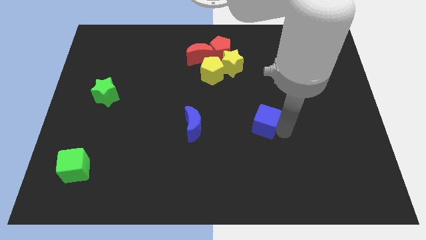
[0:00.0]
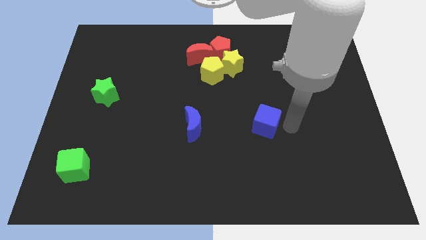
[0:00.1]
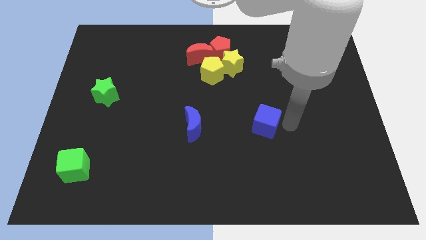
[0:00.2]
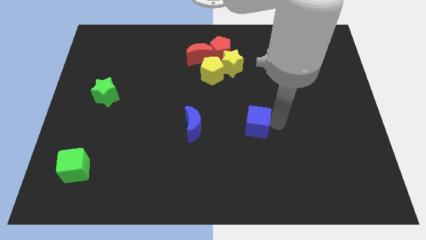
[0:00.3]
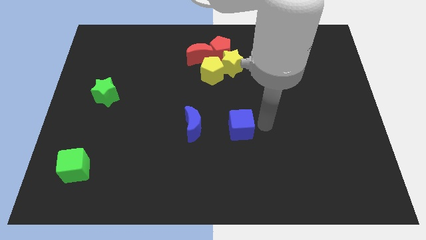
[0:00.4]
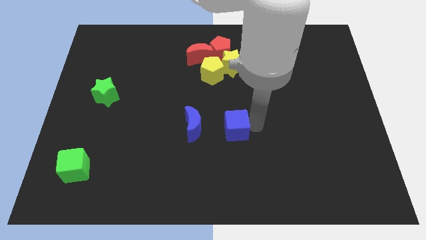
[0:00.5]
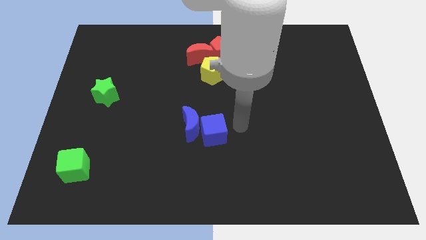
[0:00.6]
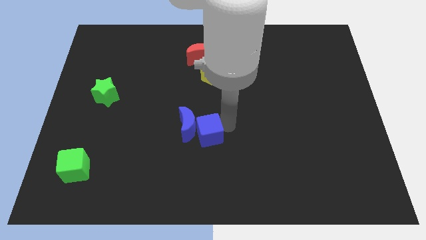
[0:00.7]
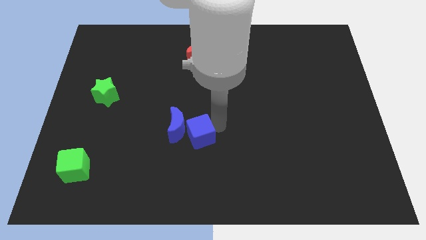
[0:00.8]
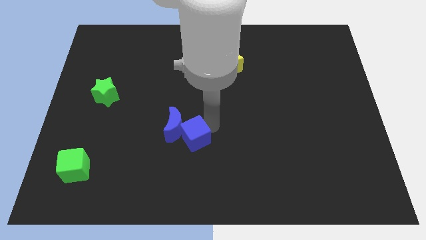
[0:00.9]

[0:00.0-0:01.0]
put the blue cube into the blue moon

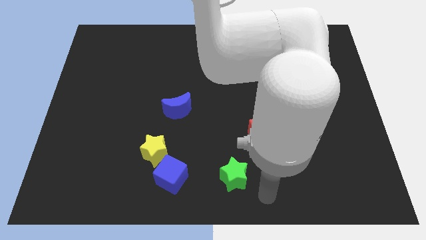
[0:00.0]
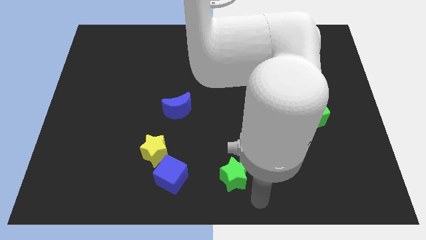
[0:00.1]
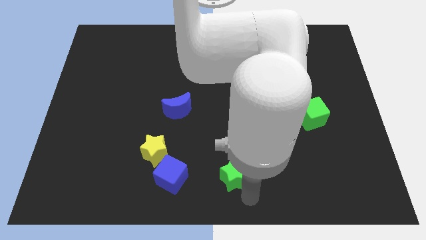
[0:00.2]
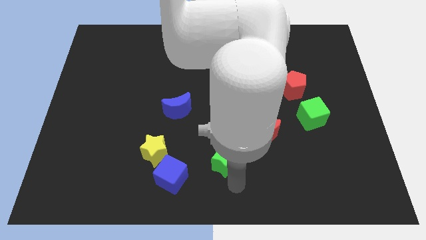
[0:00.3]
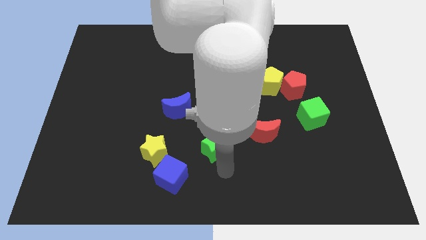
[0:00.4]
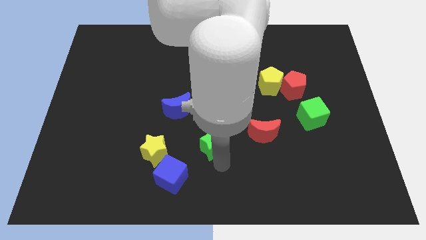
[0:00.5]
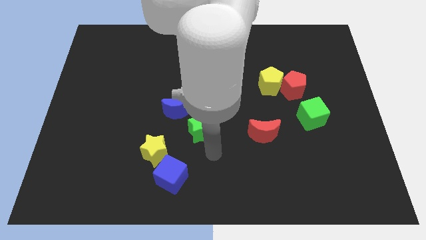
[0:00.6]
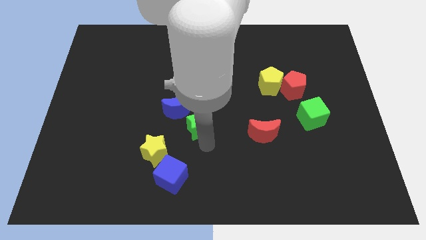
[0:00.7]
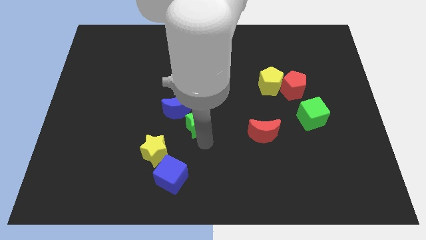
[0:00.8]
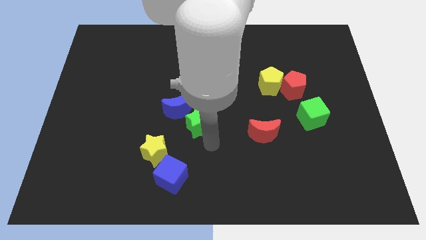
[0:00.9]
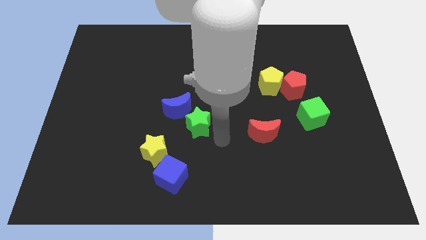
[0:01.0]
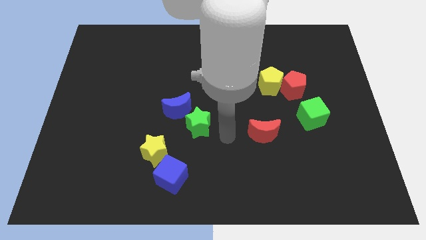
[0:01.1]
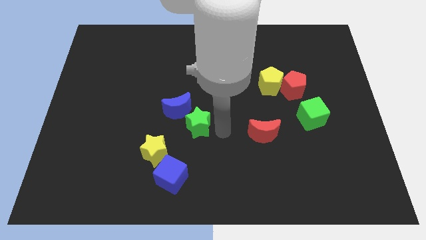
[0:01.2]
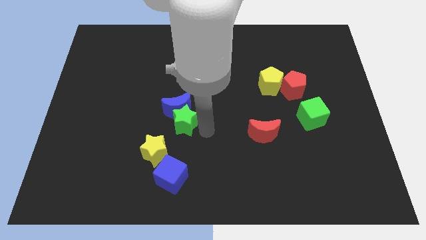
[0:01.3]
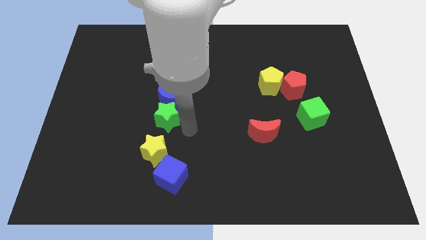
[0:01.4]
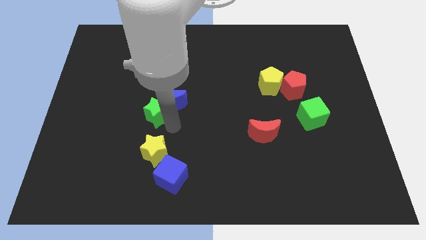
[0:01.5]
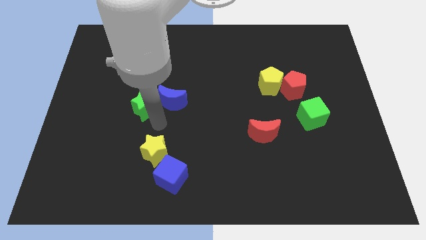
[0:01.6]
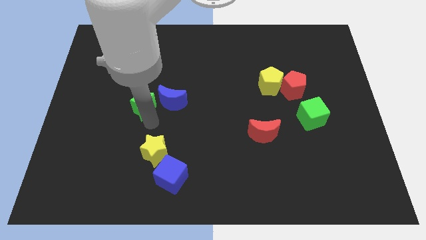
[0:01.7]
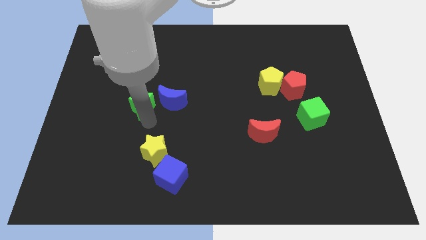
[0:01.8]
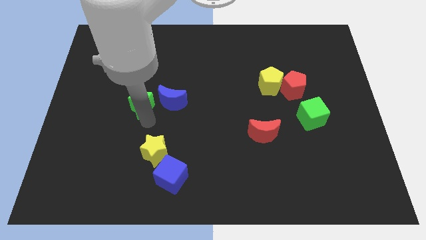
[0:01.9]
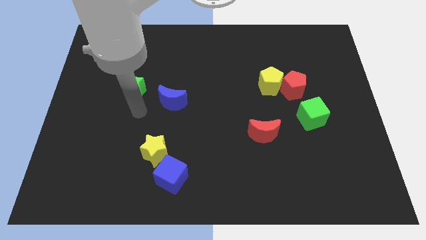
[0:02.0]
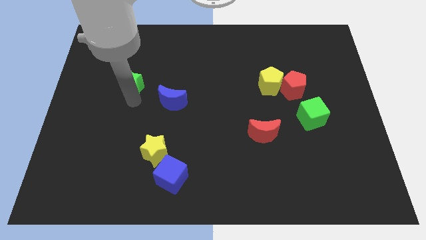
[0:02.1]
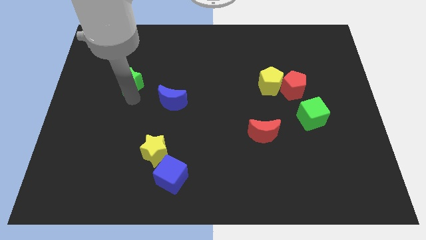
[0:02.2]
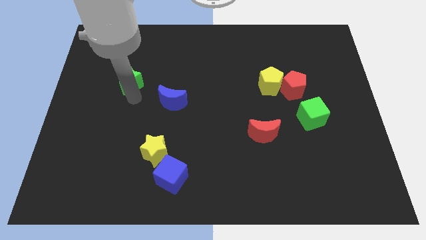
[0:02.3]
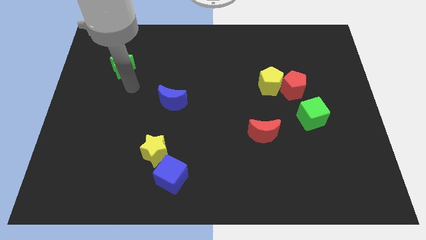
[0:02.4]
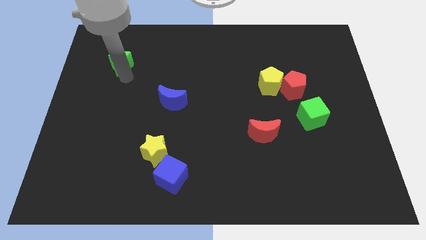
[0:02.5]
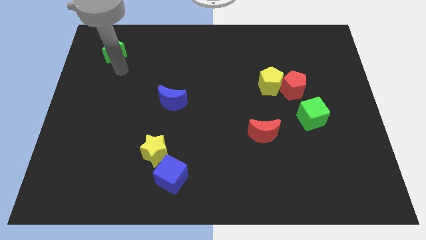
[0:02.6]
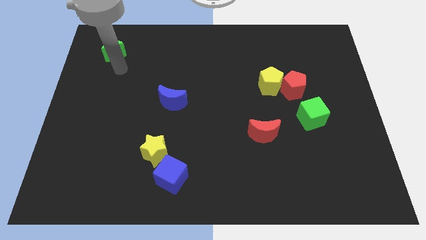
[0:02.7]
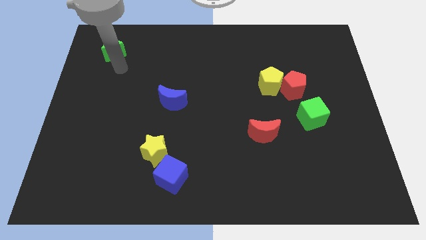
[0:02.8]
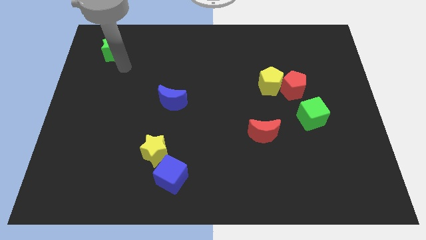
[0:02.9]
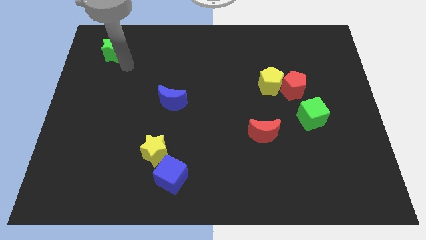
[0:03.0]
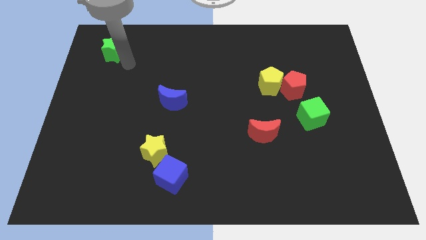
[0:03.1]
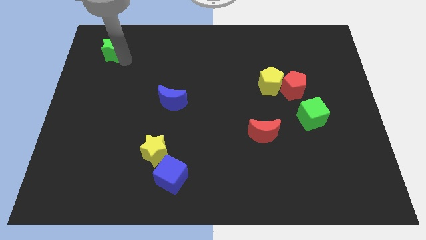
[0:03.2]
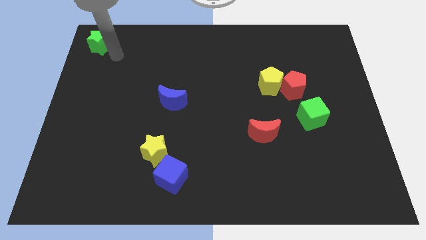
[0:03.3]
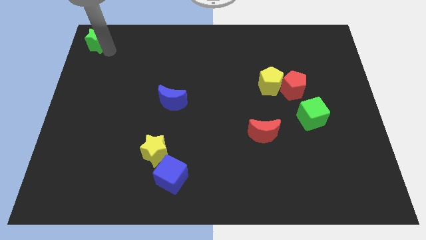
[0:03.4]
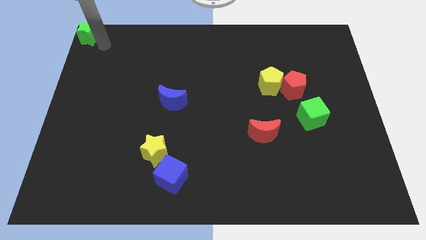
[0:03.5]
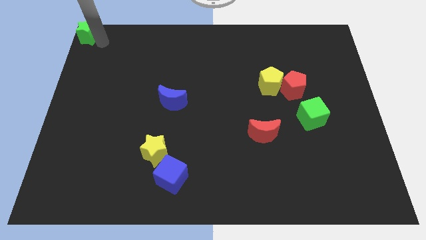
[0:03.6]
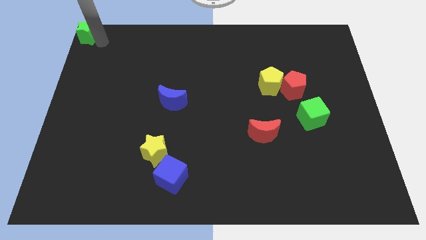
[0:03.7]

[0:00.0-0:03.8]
push the green star to the top left corner of the board

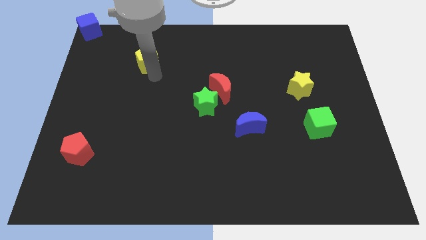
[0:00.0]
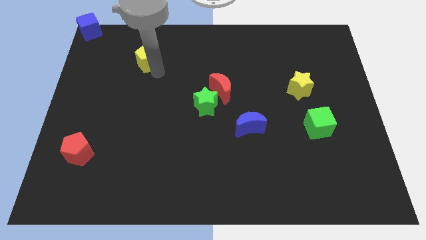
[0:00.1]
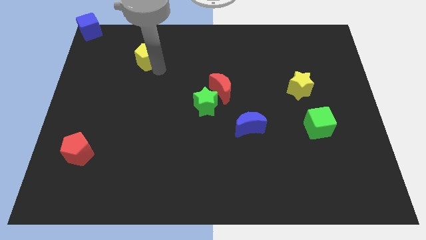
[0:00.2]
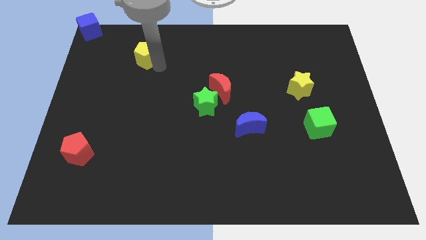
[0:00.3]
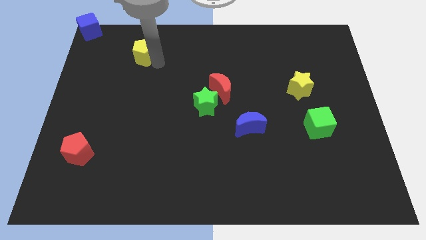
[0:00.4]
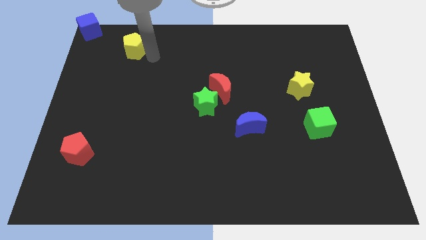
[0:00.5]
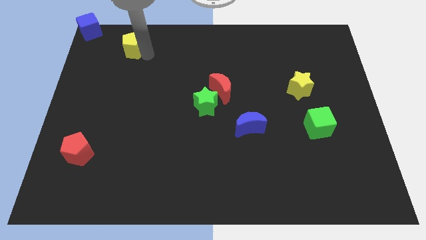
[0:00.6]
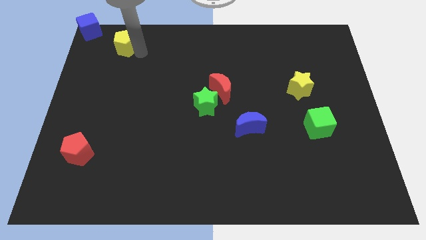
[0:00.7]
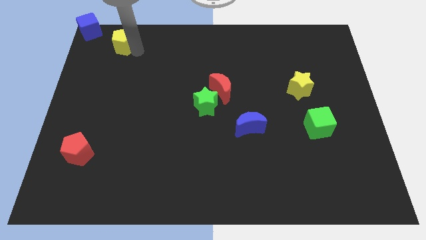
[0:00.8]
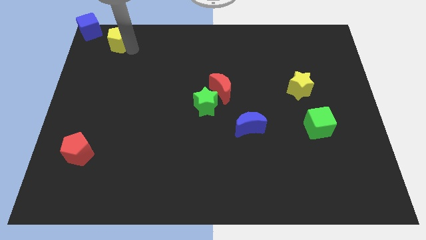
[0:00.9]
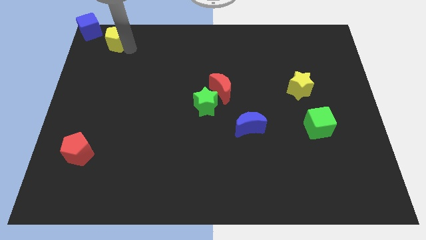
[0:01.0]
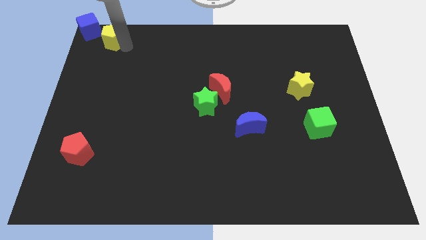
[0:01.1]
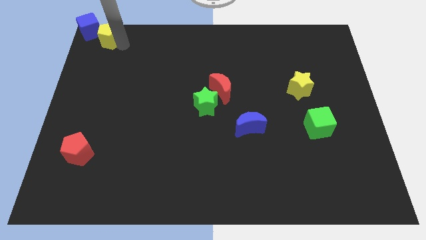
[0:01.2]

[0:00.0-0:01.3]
push the yellow pentagon towards the bottom right side of the blue cube

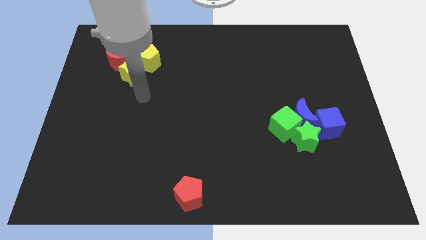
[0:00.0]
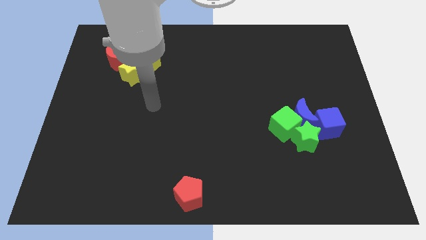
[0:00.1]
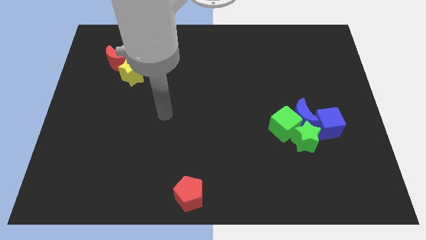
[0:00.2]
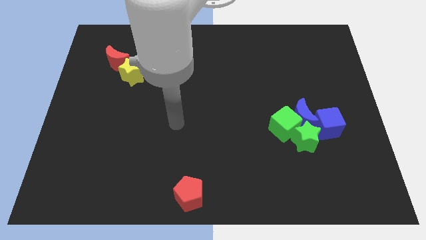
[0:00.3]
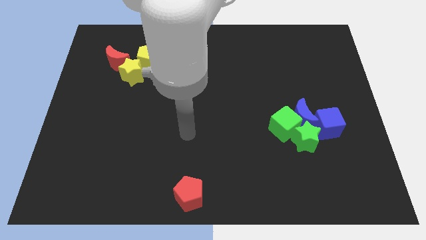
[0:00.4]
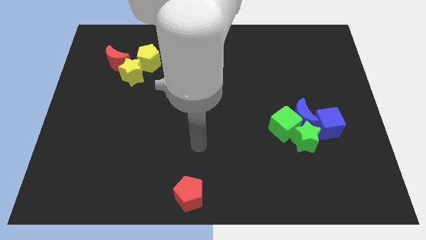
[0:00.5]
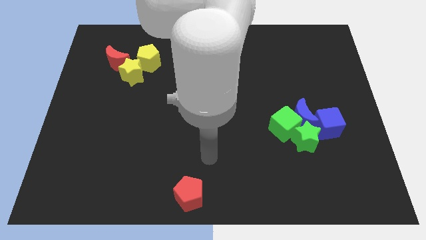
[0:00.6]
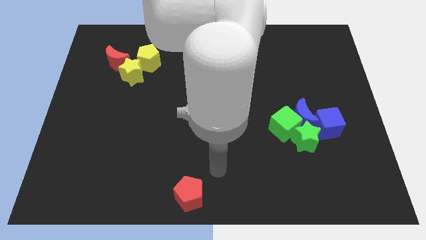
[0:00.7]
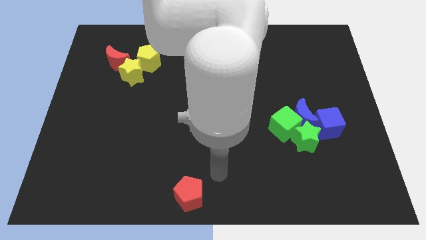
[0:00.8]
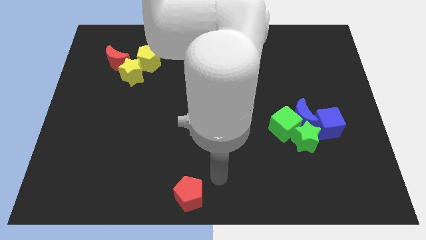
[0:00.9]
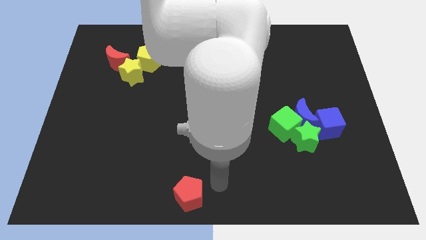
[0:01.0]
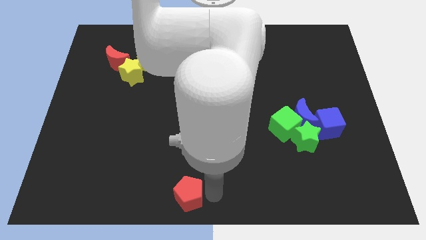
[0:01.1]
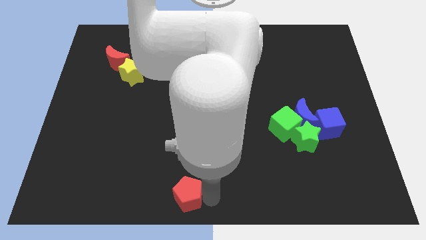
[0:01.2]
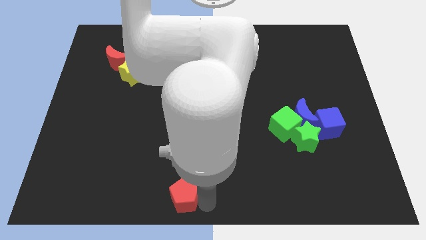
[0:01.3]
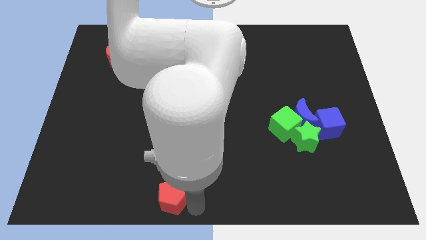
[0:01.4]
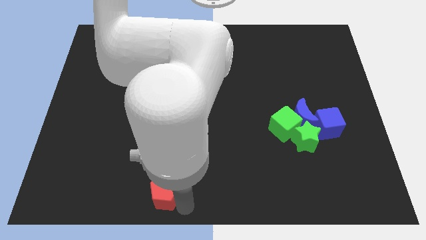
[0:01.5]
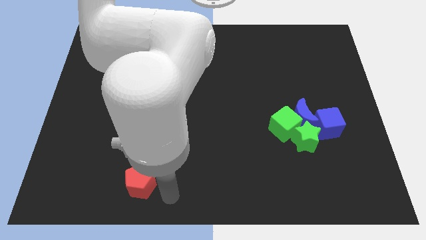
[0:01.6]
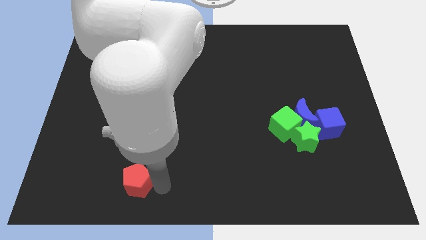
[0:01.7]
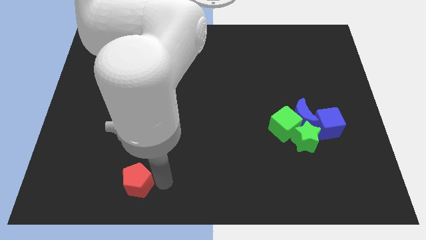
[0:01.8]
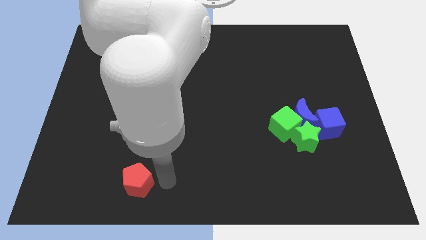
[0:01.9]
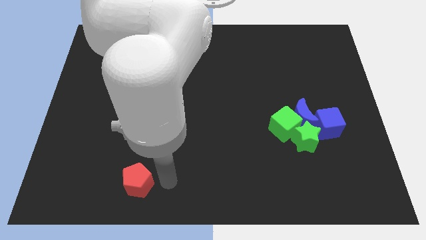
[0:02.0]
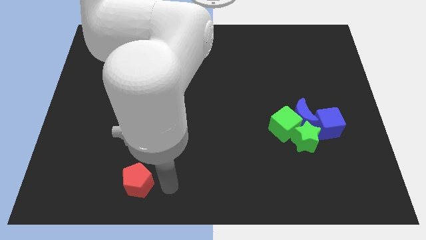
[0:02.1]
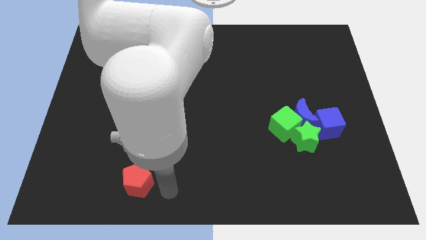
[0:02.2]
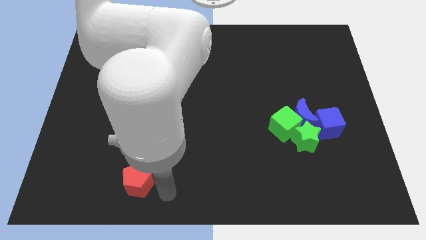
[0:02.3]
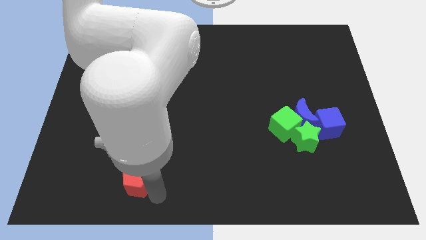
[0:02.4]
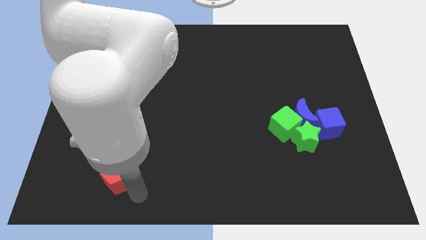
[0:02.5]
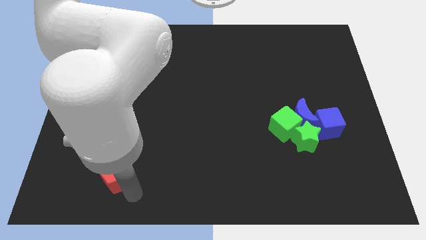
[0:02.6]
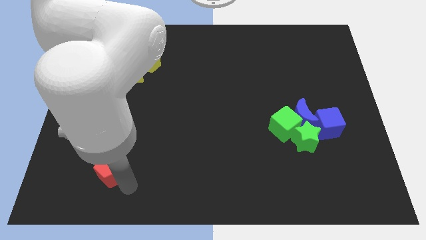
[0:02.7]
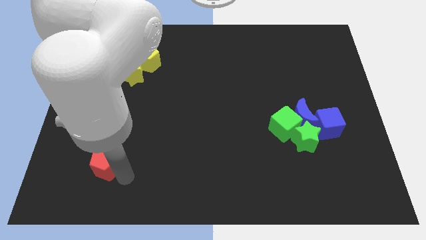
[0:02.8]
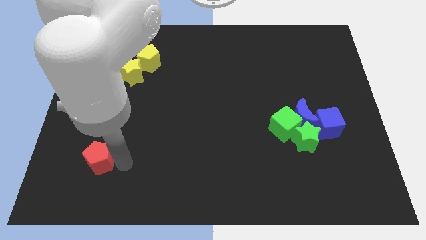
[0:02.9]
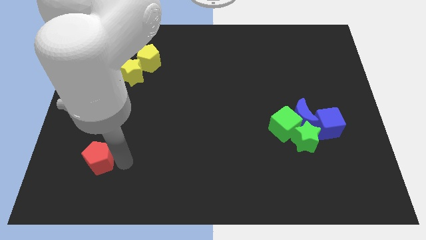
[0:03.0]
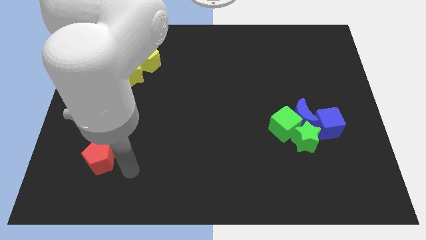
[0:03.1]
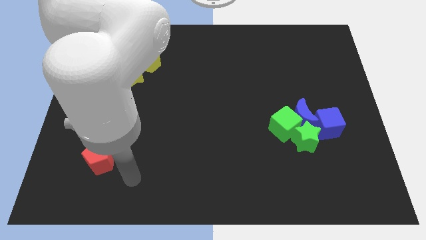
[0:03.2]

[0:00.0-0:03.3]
move the red pentagon to the left side of the table
